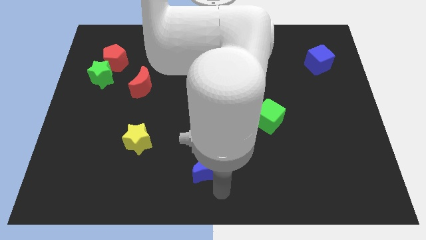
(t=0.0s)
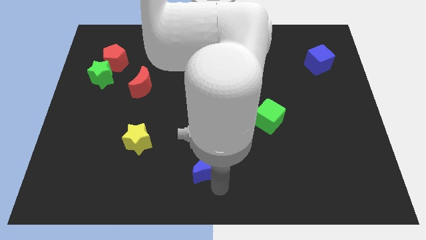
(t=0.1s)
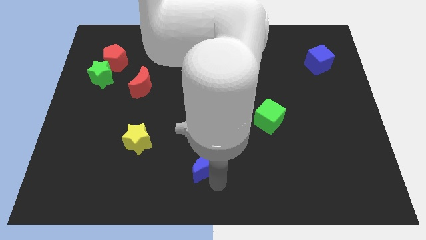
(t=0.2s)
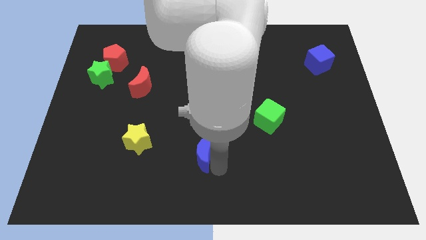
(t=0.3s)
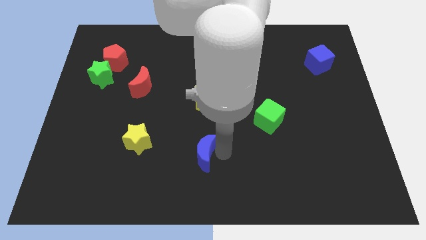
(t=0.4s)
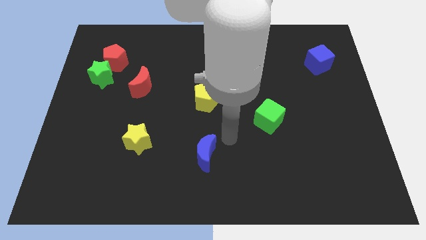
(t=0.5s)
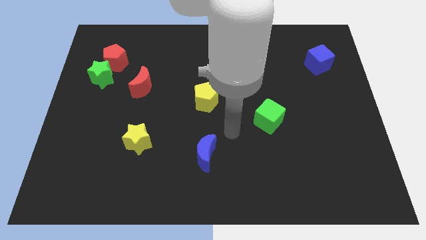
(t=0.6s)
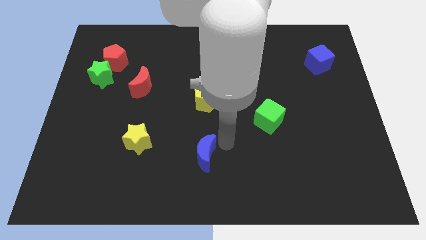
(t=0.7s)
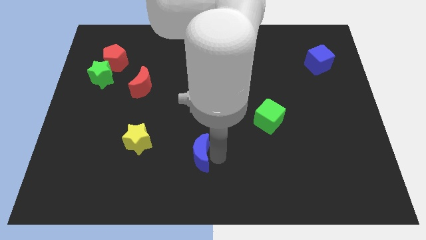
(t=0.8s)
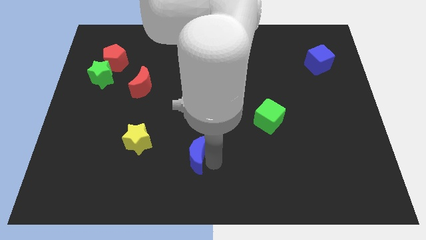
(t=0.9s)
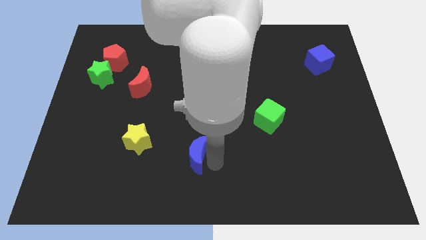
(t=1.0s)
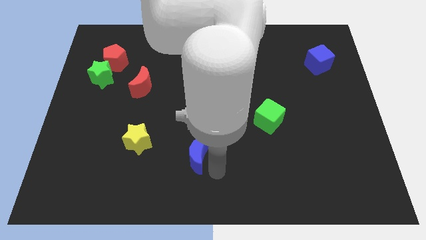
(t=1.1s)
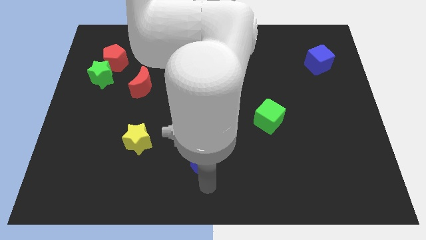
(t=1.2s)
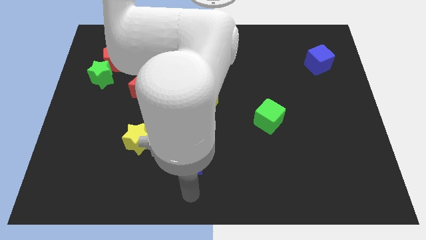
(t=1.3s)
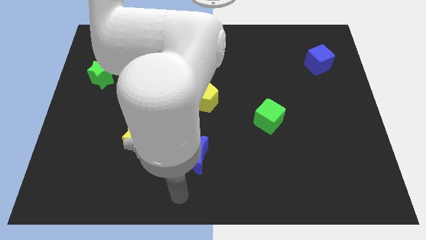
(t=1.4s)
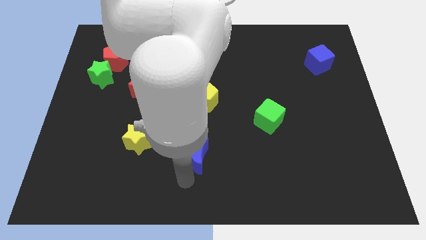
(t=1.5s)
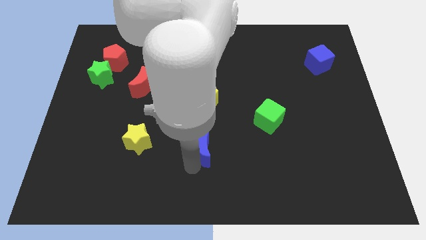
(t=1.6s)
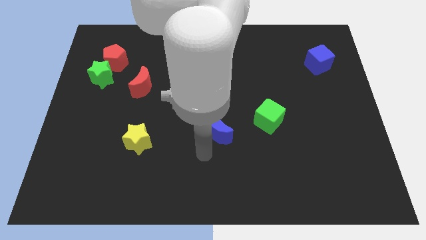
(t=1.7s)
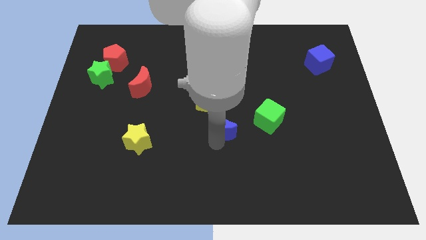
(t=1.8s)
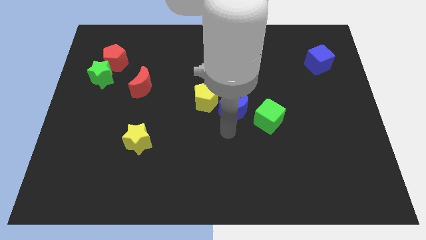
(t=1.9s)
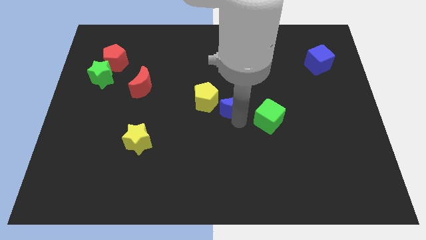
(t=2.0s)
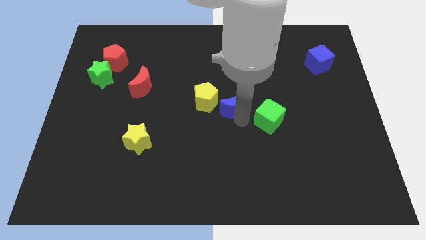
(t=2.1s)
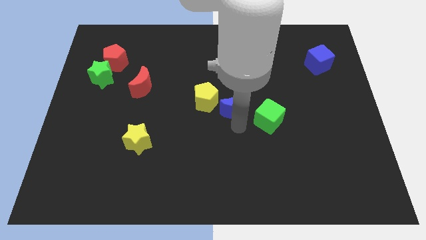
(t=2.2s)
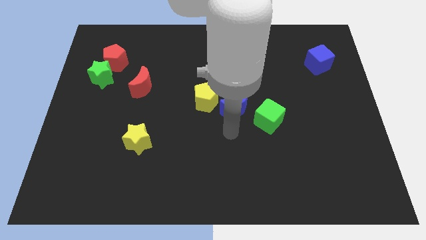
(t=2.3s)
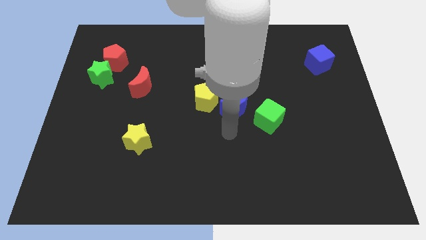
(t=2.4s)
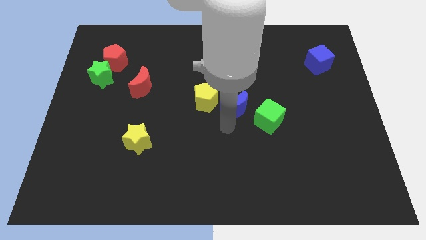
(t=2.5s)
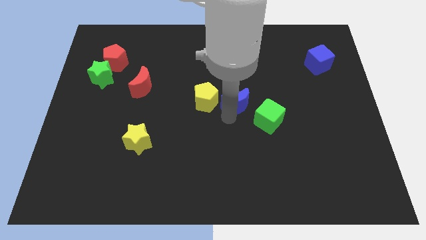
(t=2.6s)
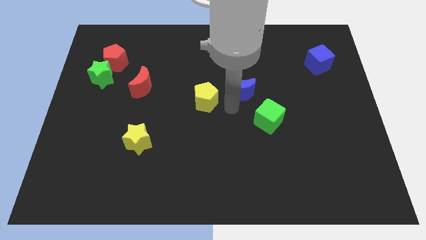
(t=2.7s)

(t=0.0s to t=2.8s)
place the blue moon between the yellow pentagon and the green cube

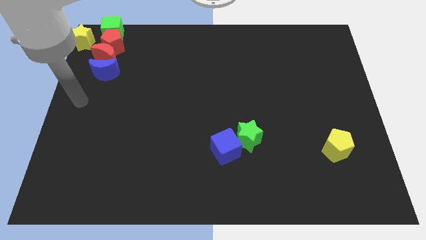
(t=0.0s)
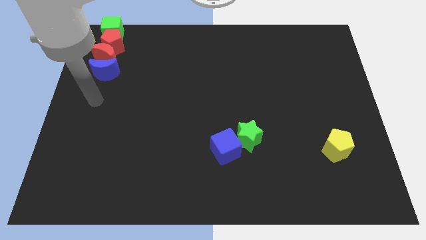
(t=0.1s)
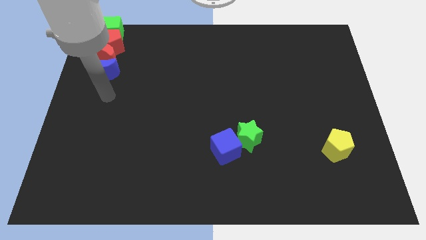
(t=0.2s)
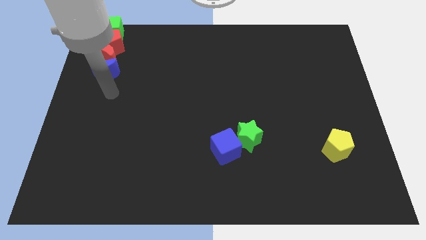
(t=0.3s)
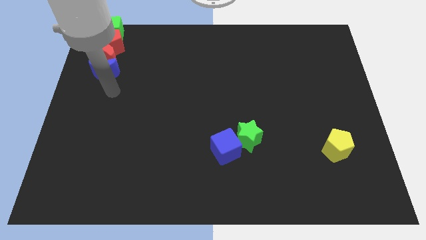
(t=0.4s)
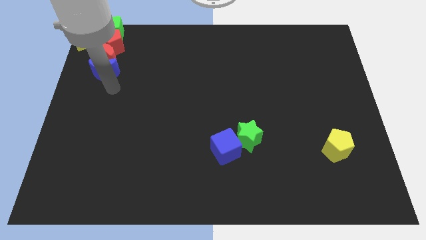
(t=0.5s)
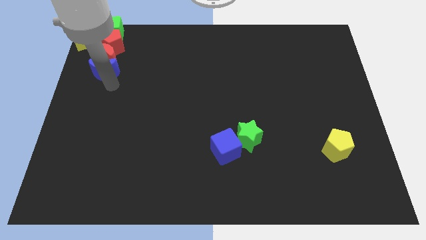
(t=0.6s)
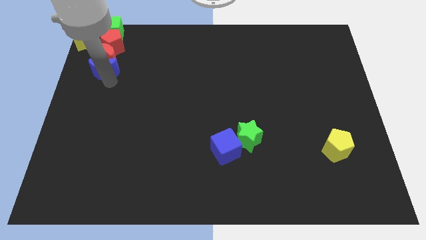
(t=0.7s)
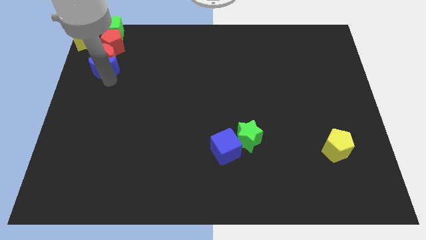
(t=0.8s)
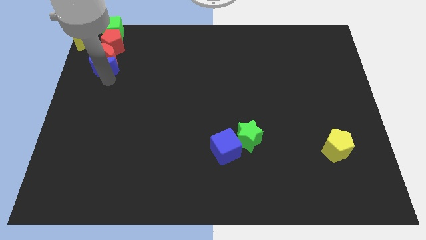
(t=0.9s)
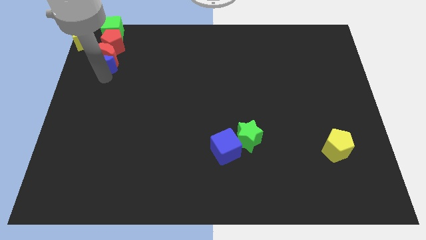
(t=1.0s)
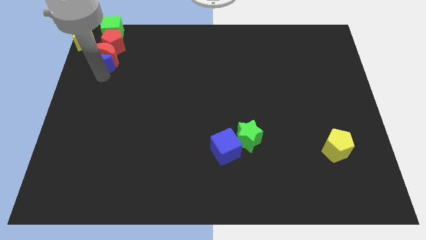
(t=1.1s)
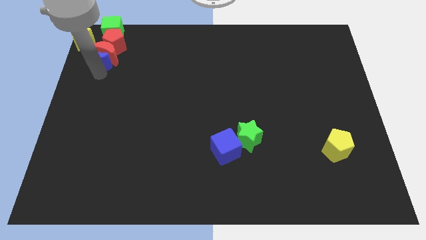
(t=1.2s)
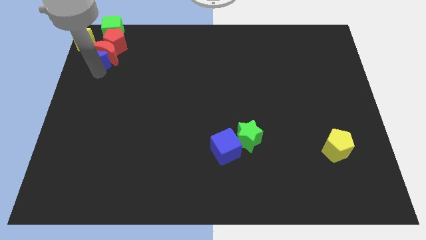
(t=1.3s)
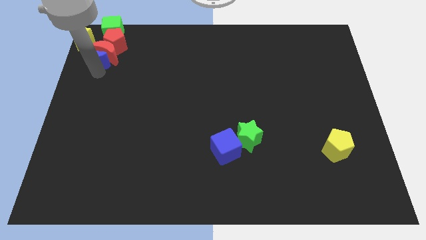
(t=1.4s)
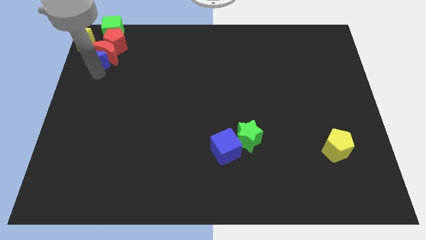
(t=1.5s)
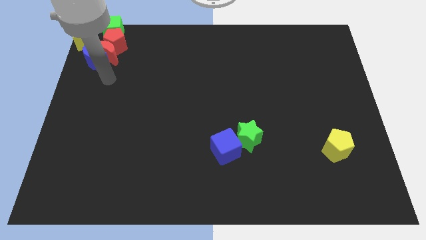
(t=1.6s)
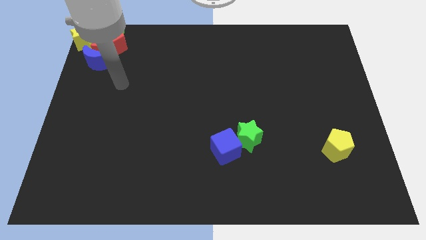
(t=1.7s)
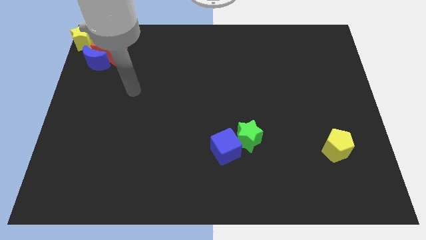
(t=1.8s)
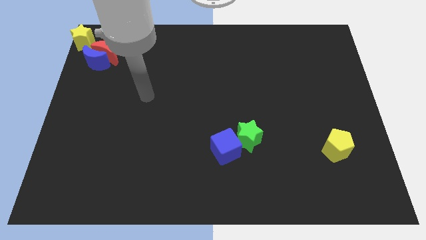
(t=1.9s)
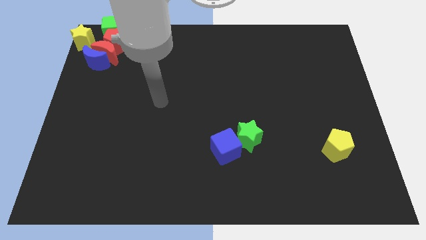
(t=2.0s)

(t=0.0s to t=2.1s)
push the blue crescent into the red crescent

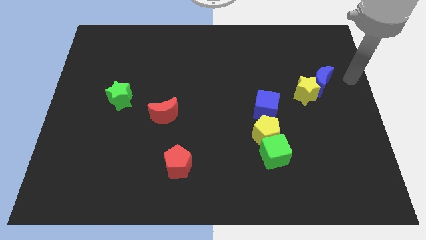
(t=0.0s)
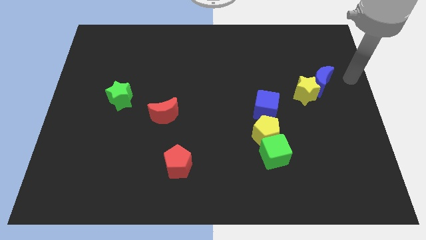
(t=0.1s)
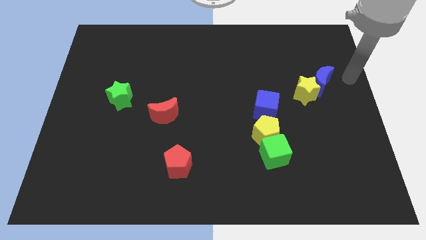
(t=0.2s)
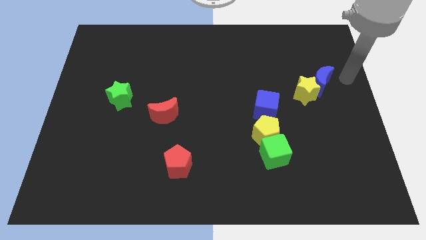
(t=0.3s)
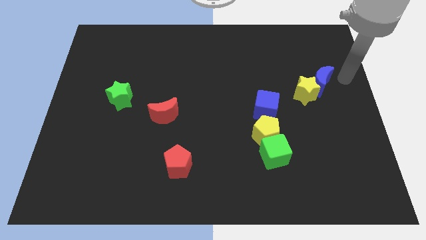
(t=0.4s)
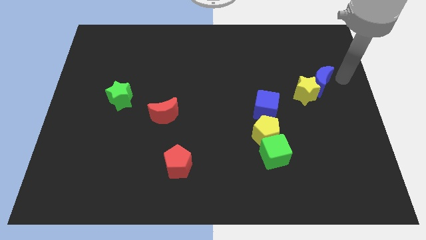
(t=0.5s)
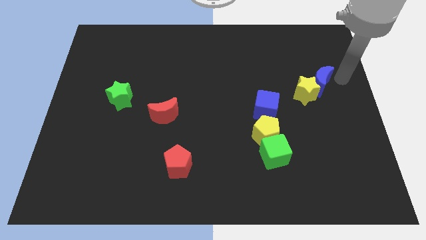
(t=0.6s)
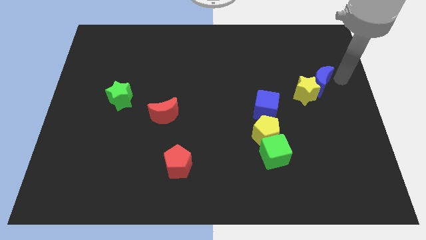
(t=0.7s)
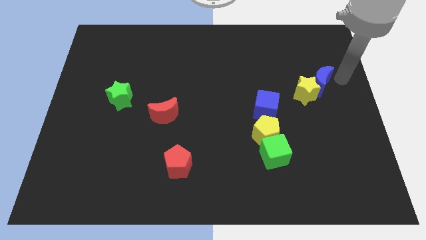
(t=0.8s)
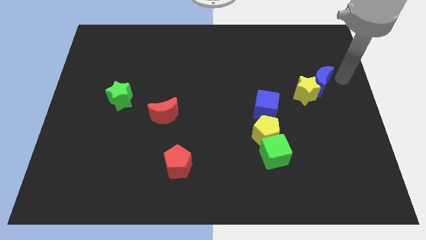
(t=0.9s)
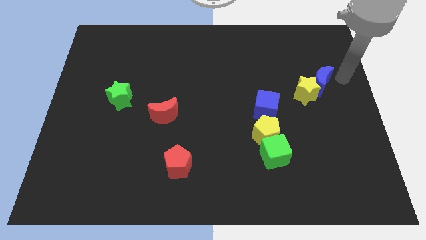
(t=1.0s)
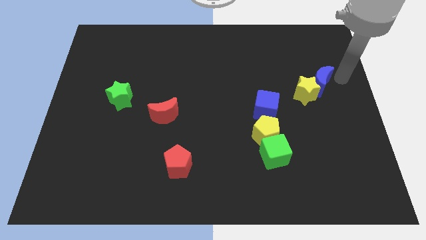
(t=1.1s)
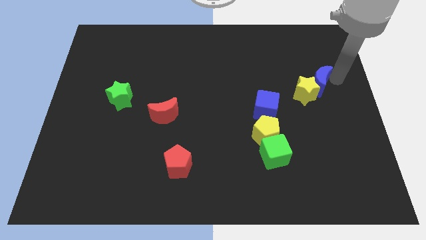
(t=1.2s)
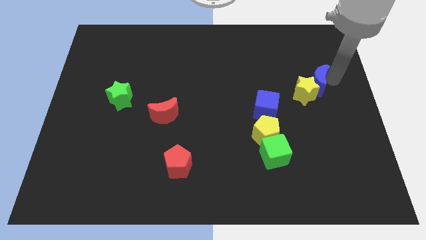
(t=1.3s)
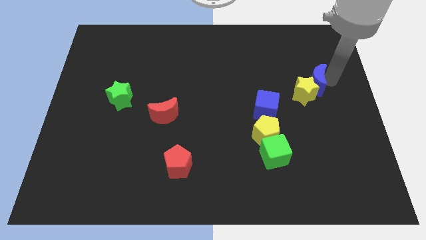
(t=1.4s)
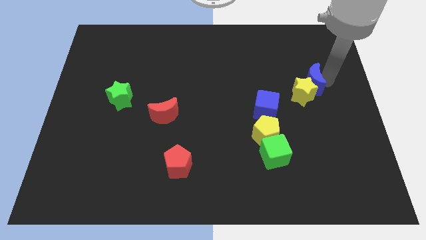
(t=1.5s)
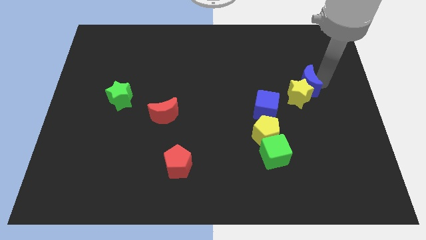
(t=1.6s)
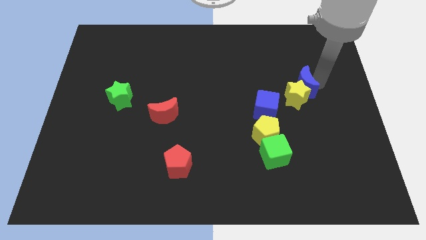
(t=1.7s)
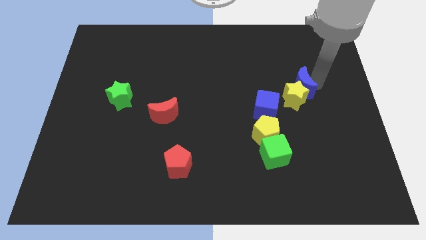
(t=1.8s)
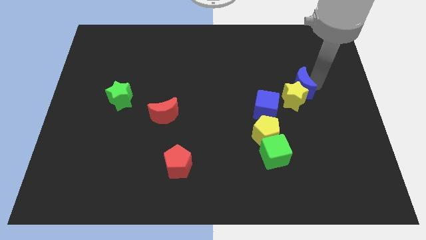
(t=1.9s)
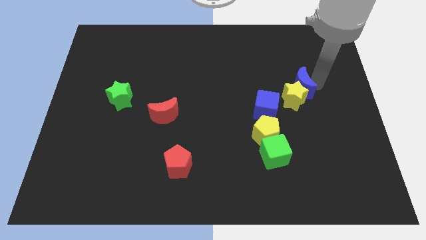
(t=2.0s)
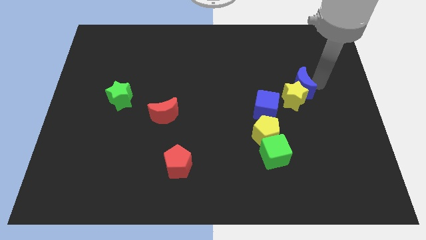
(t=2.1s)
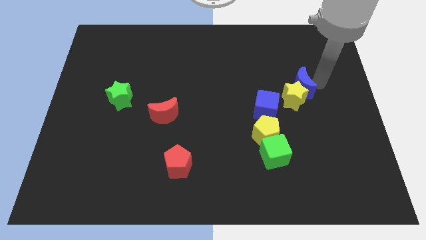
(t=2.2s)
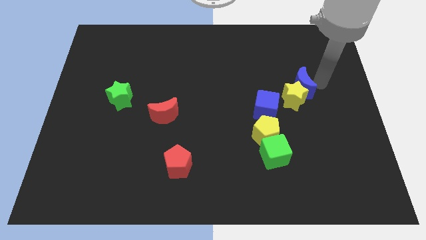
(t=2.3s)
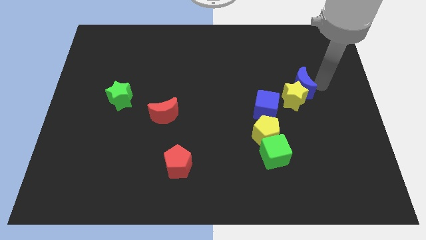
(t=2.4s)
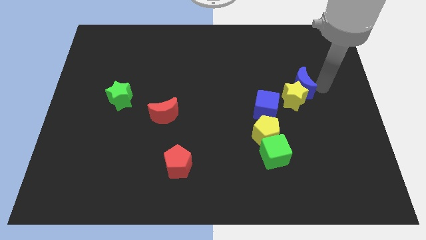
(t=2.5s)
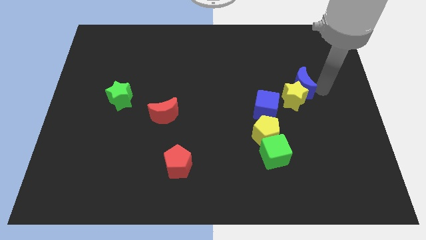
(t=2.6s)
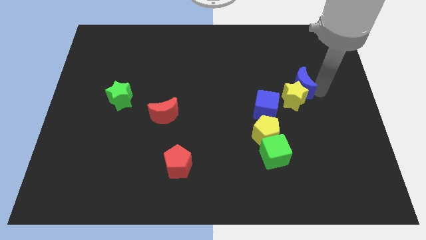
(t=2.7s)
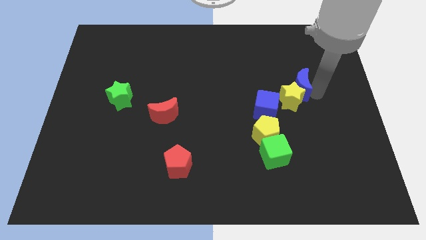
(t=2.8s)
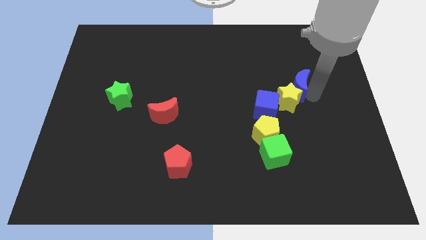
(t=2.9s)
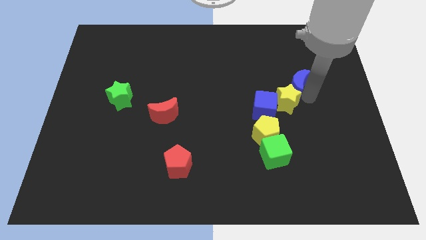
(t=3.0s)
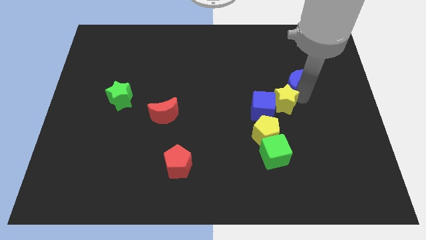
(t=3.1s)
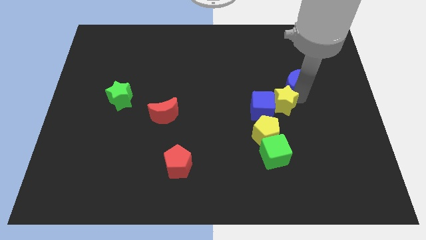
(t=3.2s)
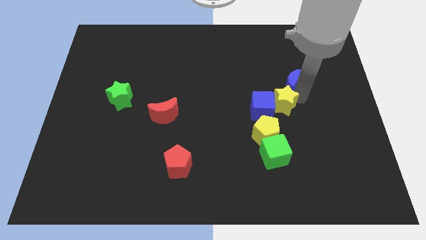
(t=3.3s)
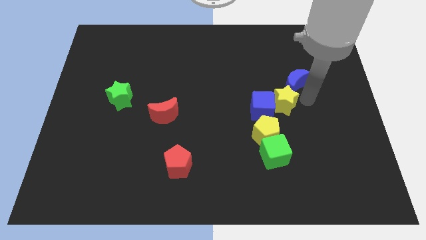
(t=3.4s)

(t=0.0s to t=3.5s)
move the blue crescent along with the yellow star into the blue cube

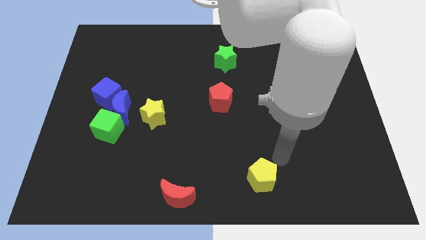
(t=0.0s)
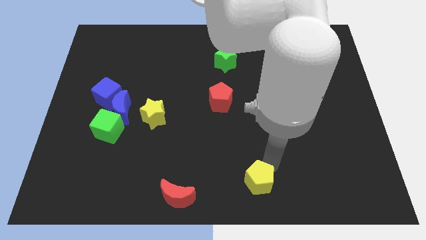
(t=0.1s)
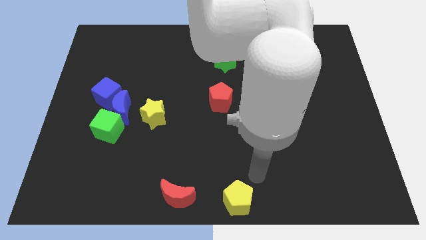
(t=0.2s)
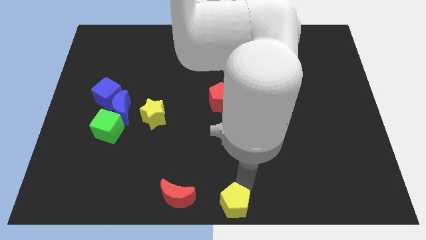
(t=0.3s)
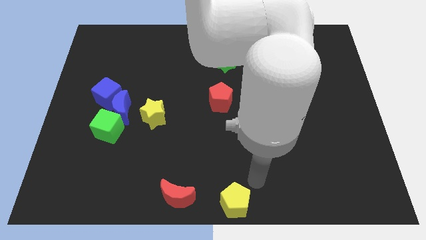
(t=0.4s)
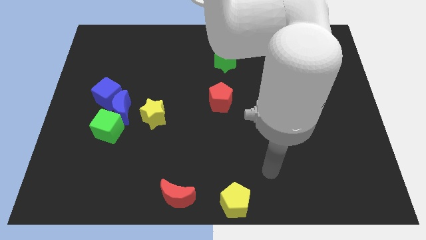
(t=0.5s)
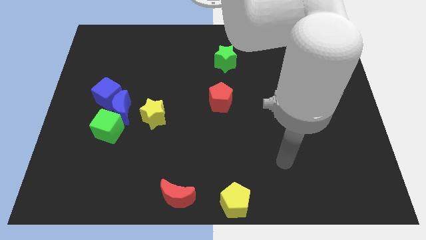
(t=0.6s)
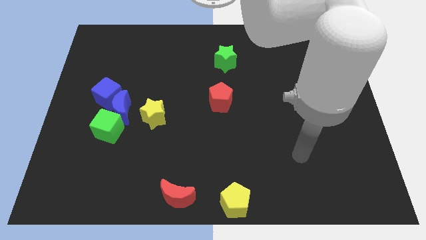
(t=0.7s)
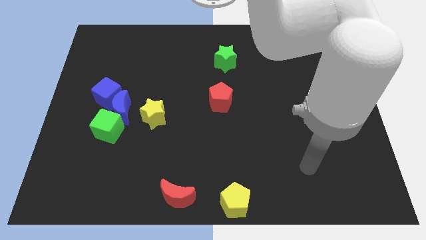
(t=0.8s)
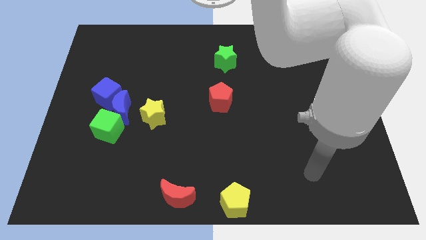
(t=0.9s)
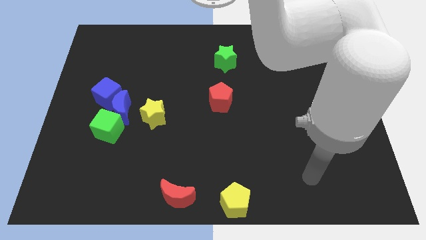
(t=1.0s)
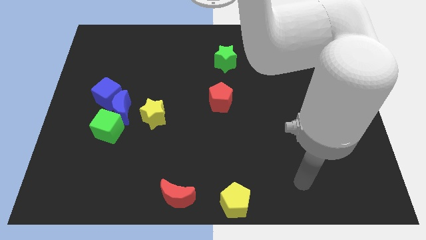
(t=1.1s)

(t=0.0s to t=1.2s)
push the yellow pentagon to the right of the red crescent
